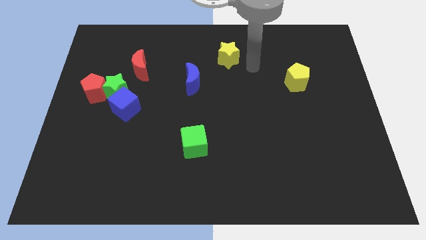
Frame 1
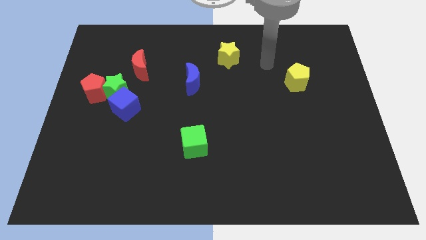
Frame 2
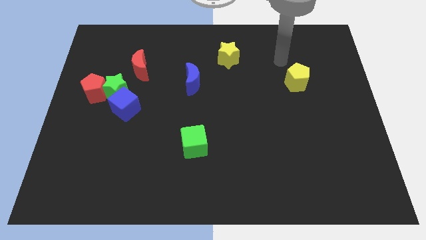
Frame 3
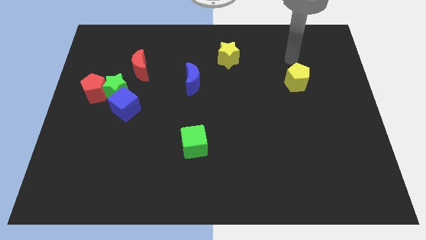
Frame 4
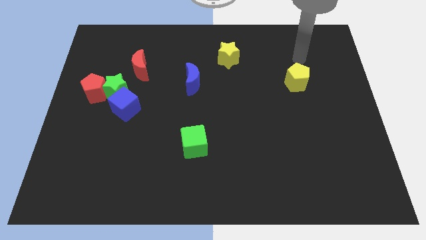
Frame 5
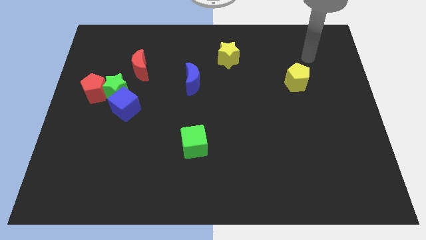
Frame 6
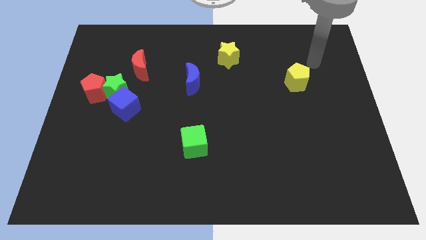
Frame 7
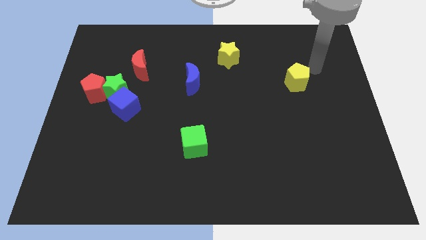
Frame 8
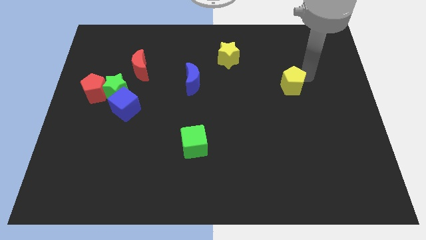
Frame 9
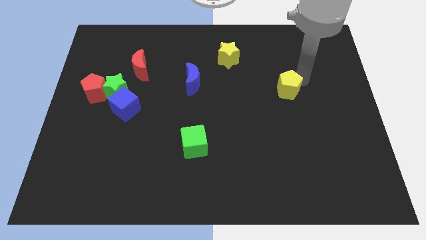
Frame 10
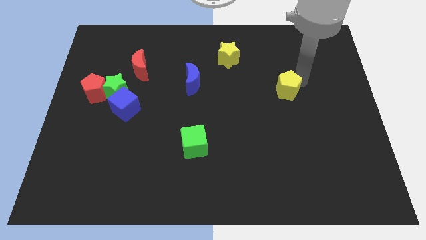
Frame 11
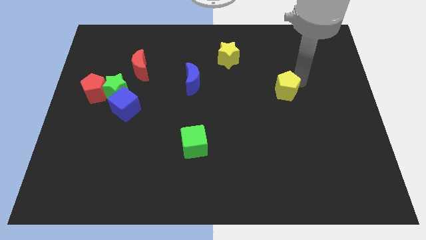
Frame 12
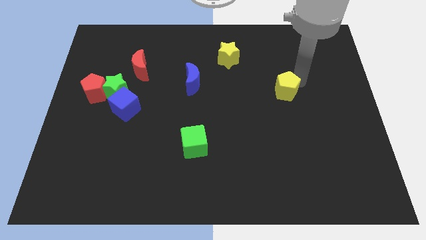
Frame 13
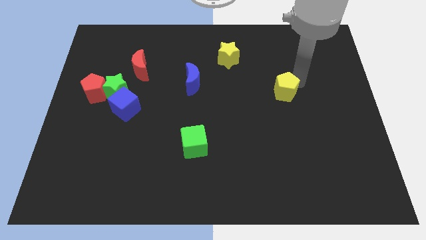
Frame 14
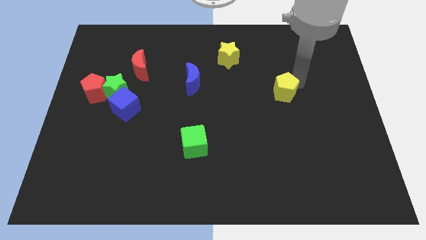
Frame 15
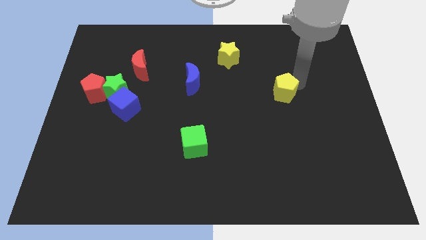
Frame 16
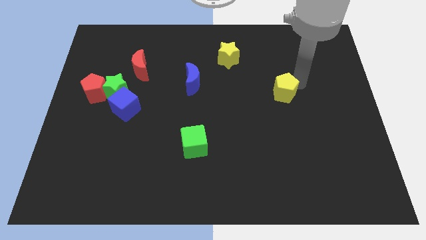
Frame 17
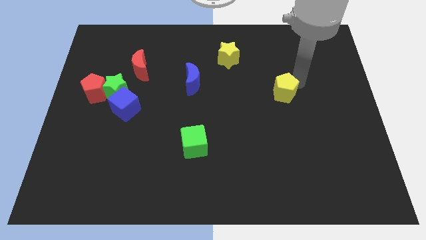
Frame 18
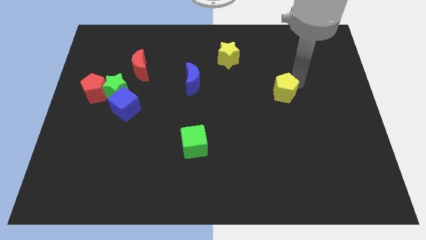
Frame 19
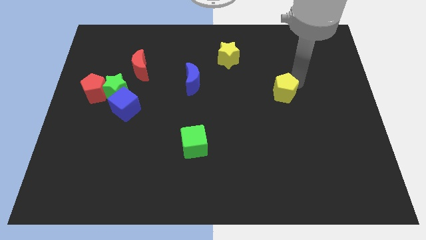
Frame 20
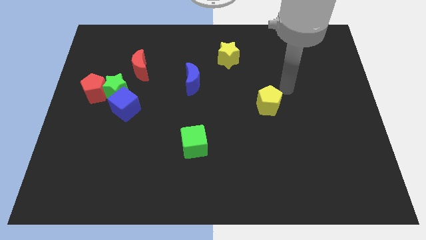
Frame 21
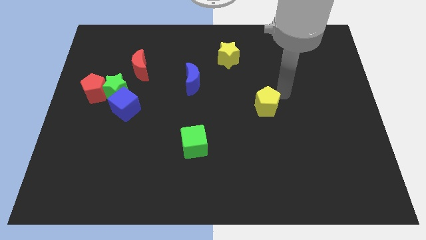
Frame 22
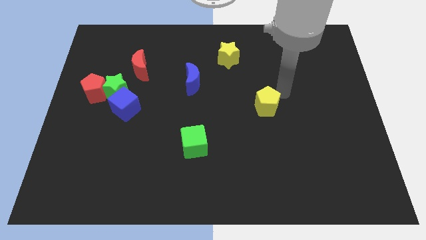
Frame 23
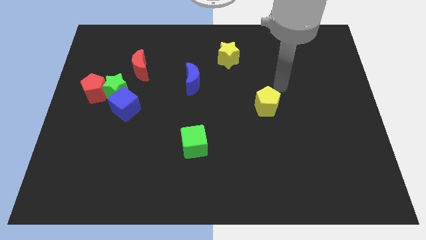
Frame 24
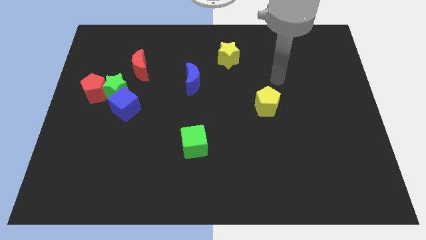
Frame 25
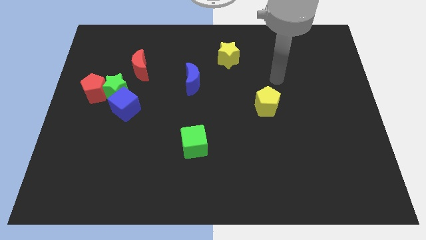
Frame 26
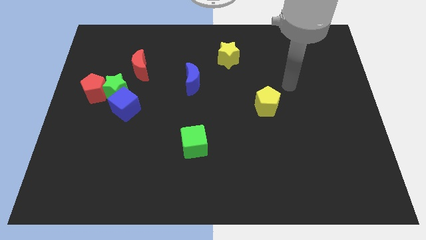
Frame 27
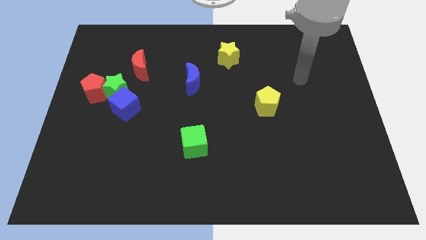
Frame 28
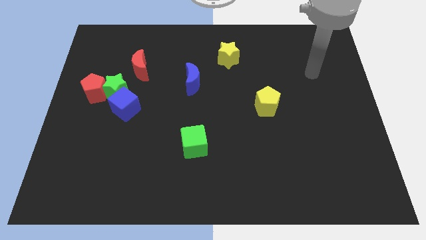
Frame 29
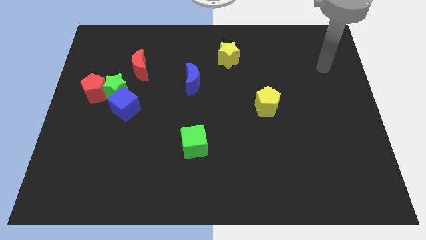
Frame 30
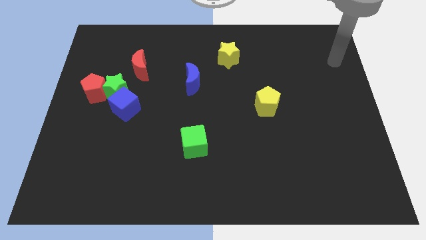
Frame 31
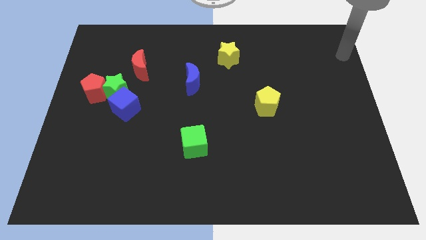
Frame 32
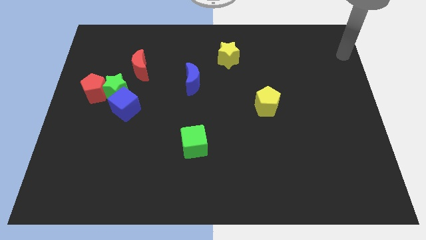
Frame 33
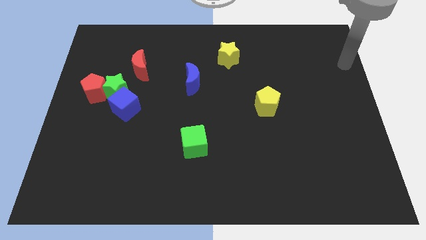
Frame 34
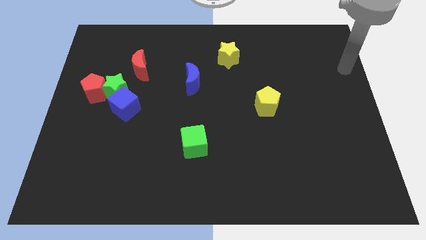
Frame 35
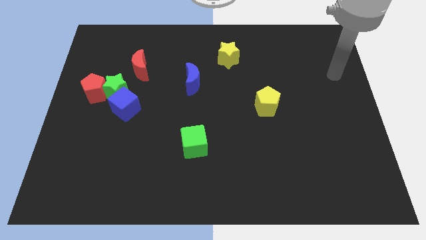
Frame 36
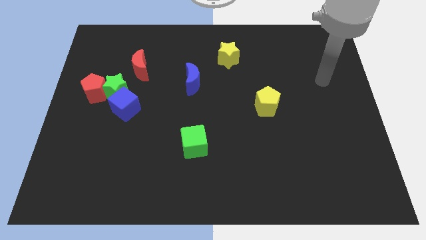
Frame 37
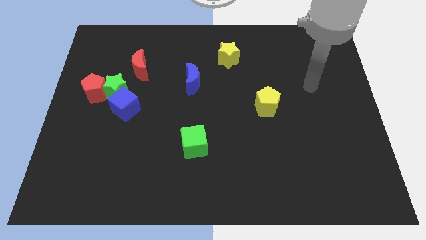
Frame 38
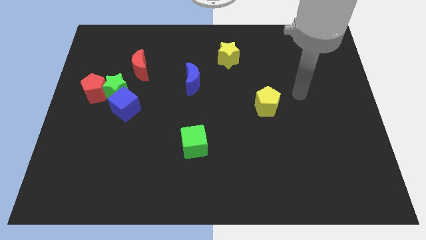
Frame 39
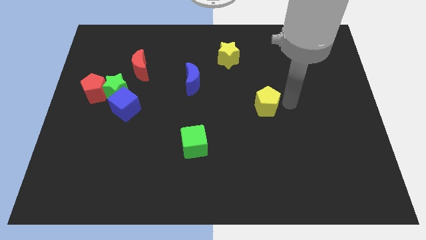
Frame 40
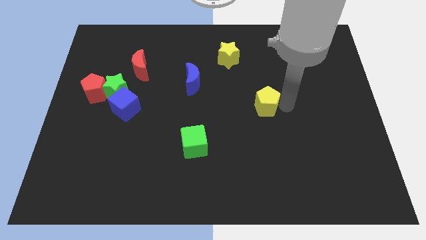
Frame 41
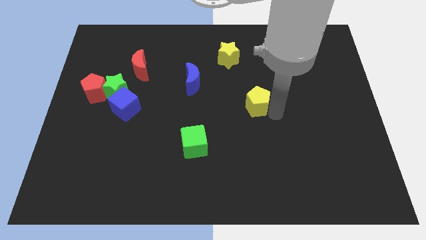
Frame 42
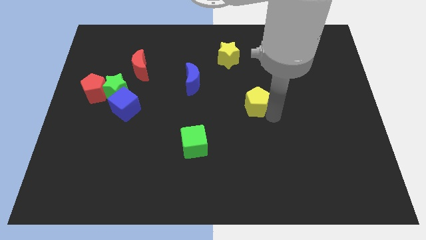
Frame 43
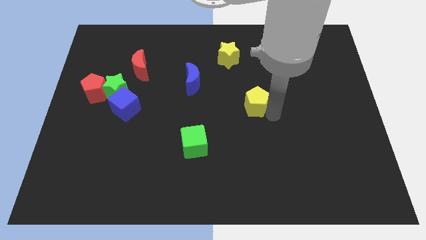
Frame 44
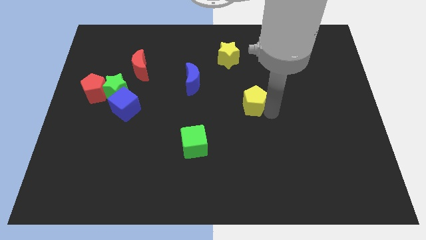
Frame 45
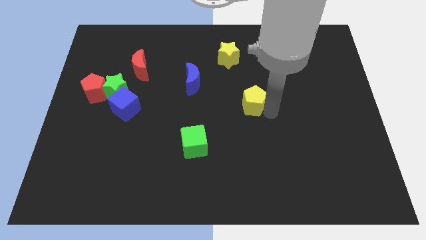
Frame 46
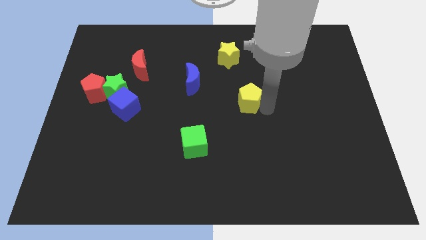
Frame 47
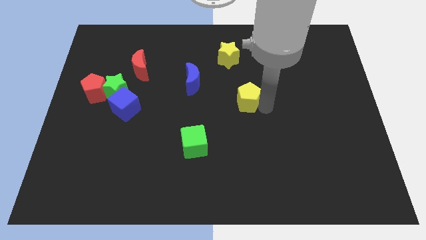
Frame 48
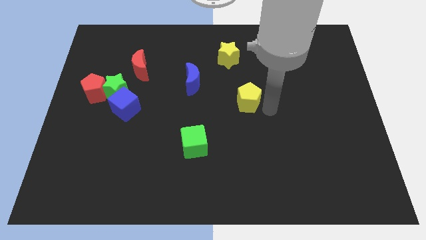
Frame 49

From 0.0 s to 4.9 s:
push the yellow pentagon below the yellow star

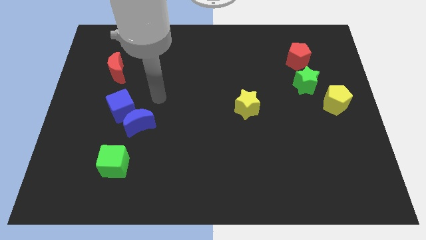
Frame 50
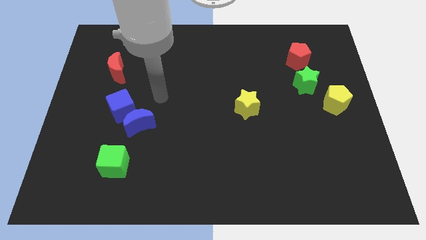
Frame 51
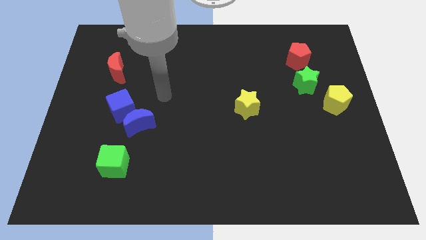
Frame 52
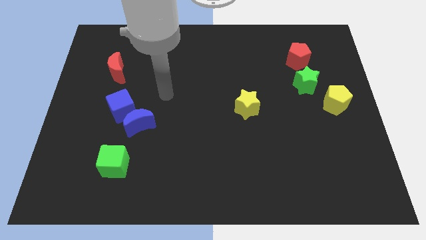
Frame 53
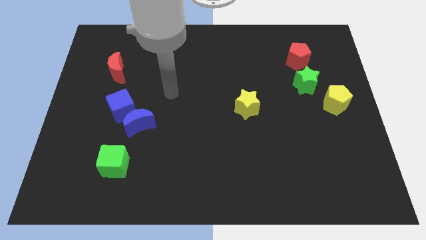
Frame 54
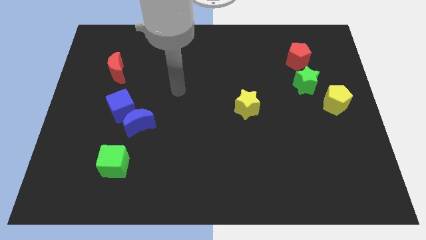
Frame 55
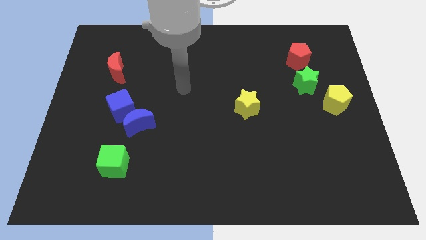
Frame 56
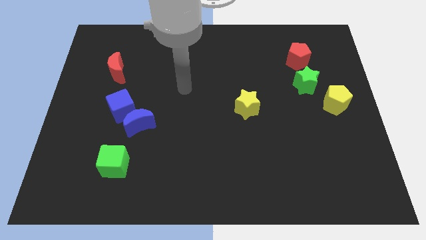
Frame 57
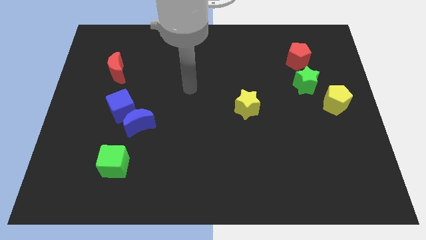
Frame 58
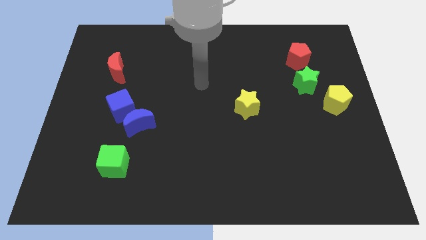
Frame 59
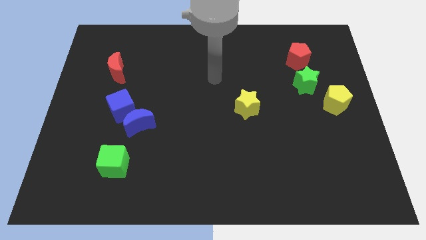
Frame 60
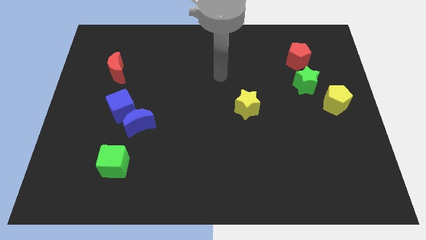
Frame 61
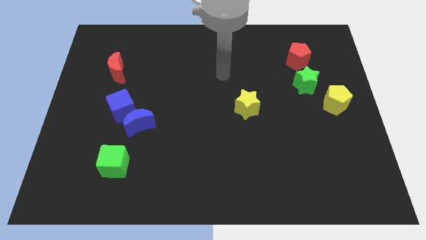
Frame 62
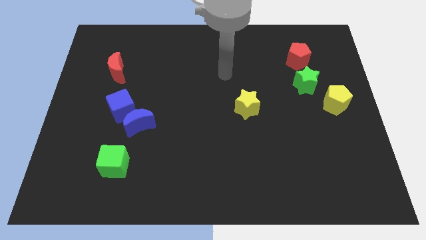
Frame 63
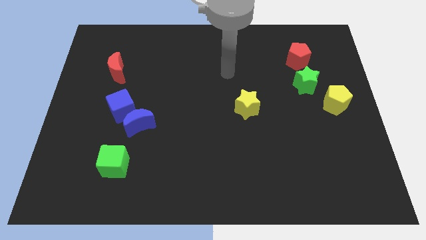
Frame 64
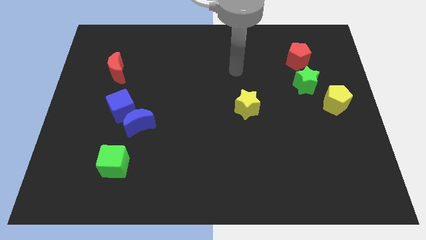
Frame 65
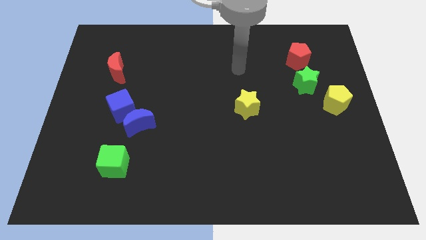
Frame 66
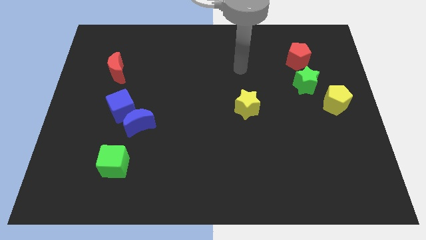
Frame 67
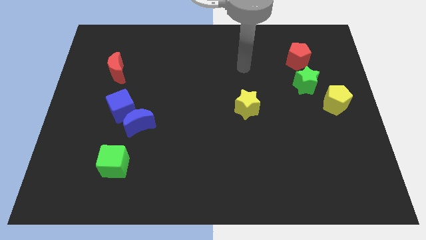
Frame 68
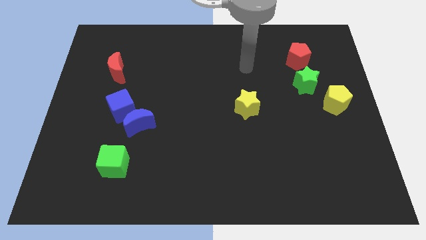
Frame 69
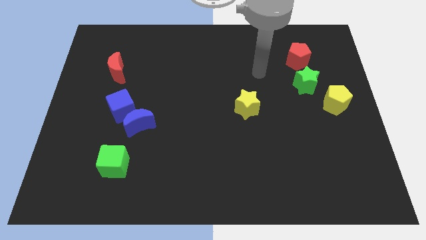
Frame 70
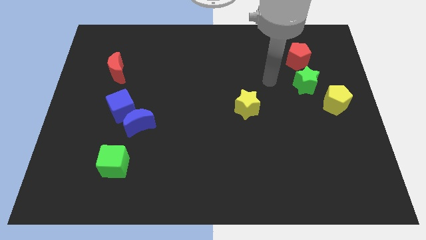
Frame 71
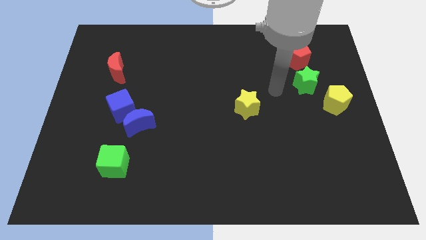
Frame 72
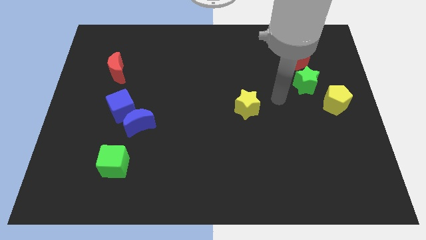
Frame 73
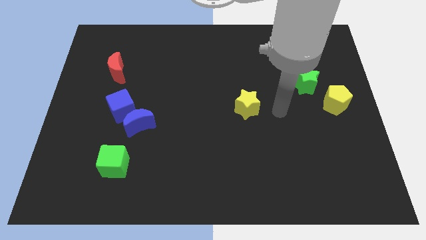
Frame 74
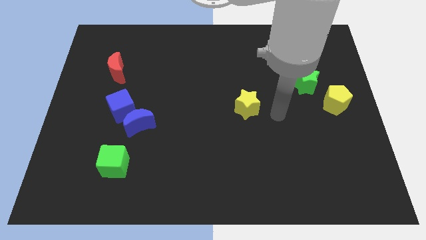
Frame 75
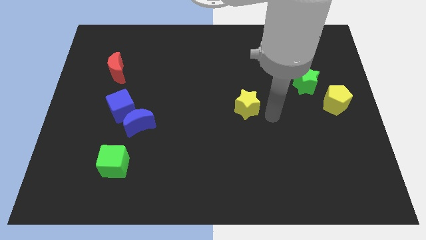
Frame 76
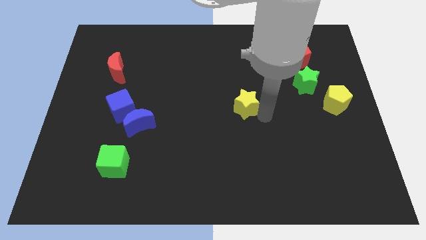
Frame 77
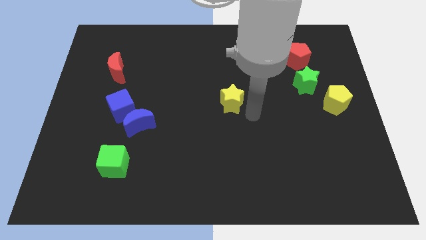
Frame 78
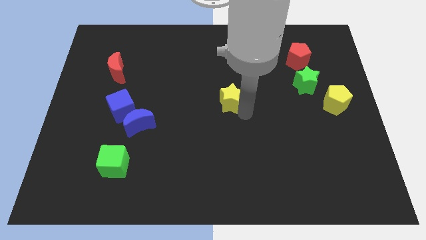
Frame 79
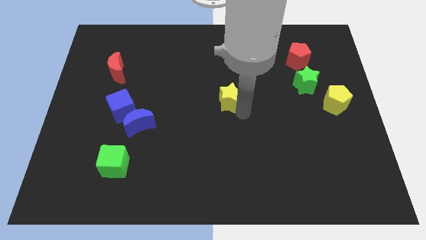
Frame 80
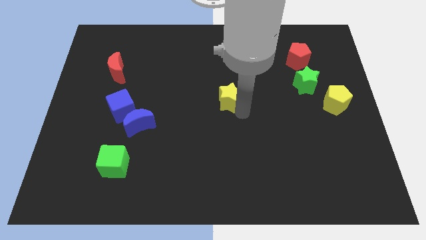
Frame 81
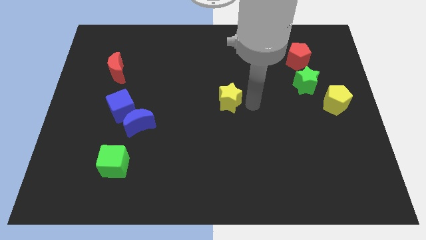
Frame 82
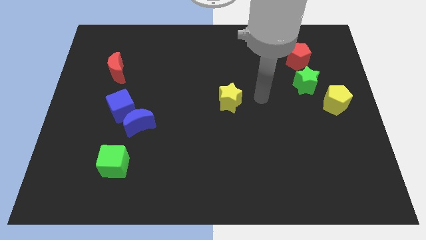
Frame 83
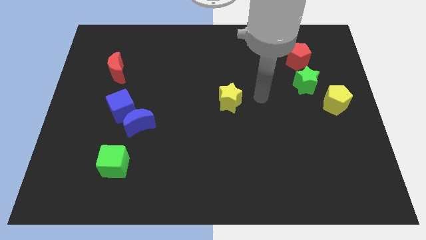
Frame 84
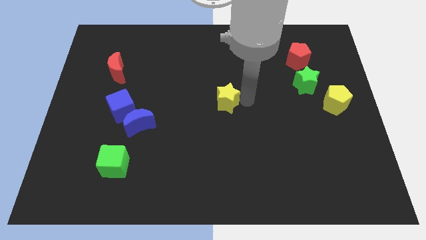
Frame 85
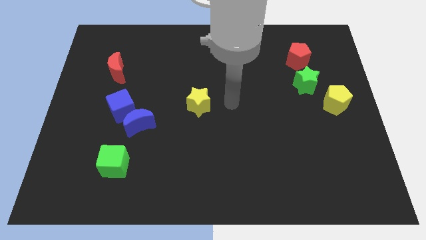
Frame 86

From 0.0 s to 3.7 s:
place the yellow star at the center of the board

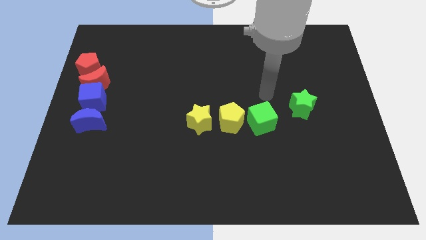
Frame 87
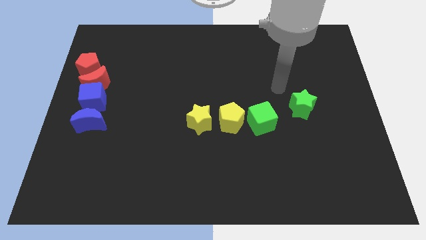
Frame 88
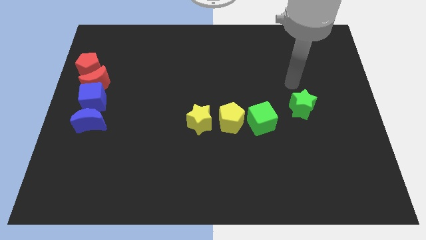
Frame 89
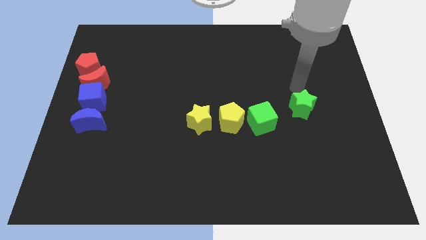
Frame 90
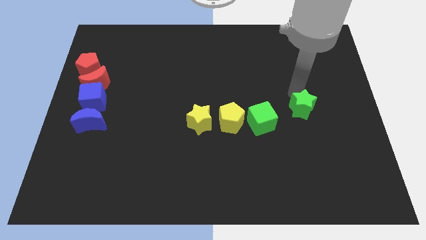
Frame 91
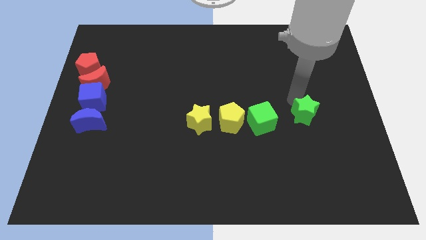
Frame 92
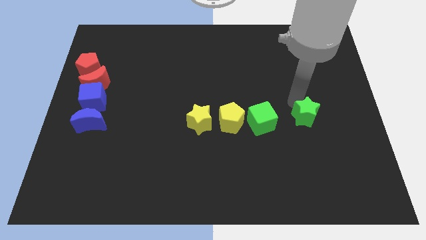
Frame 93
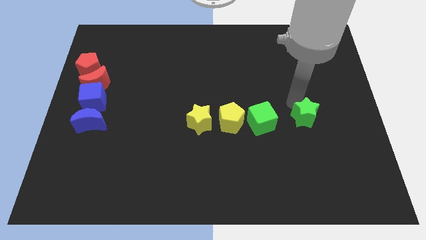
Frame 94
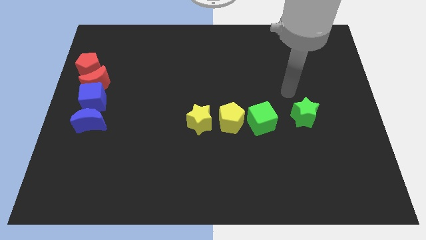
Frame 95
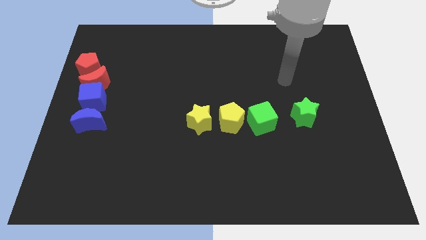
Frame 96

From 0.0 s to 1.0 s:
push the green star downwards slightly
